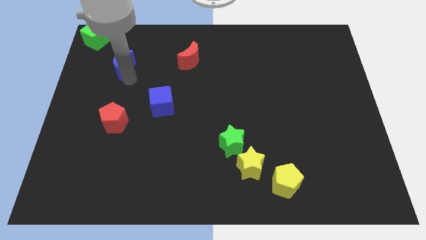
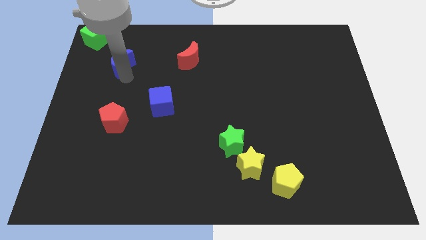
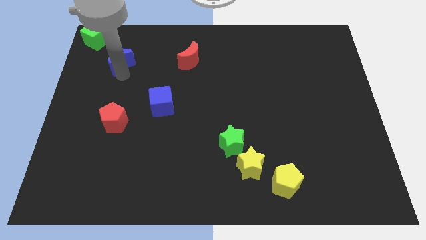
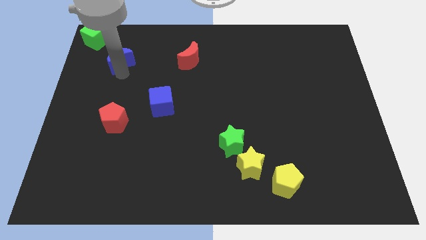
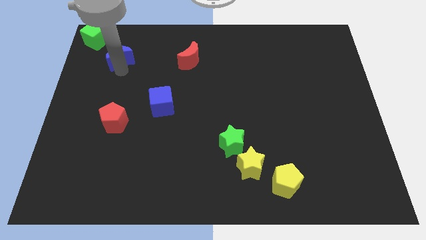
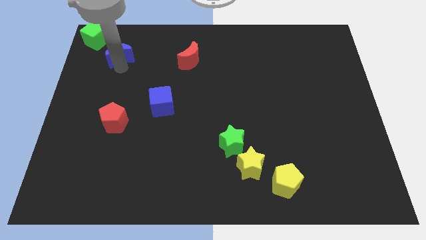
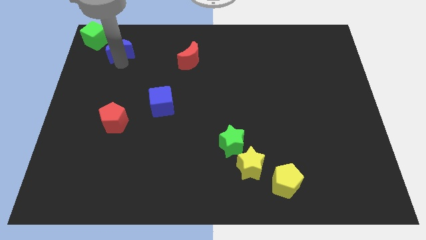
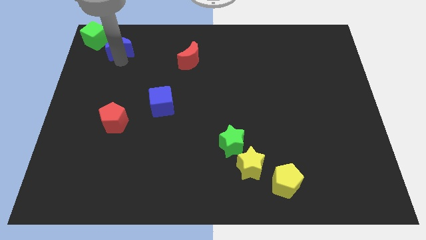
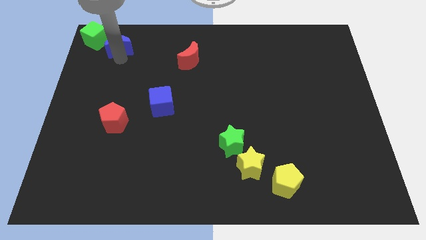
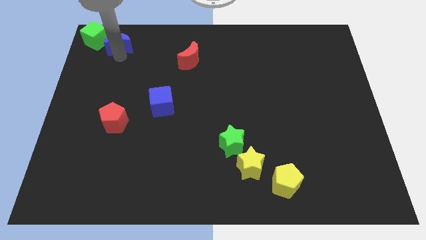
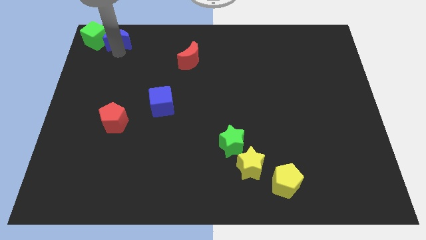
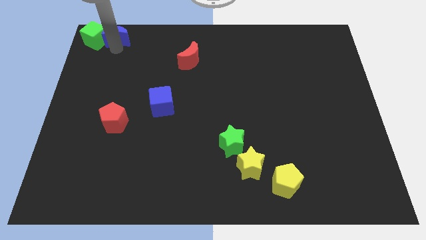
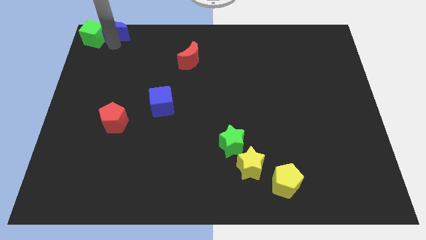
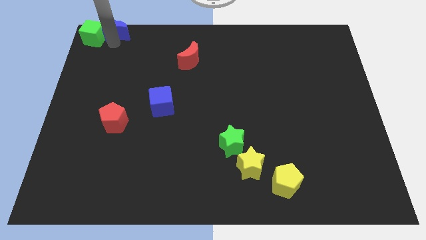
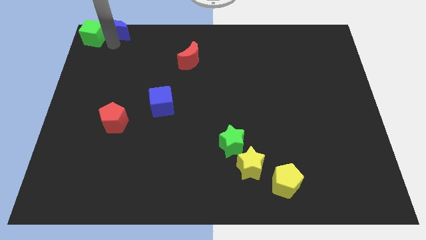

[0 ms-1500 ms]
put the blue crescent on the right side of the green cube

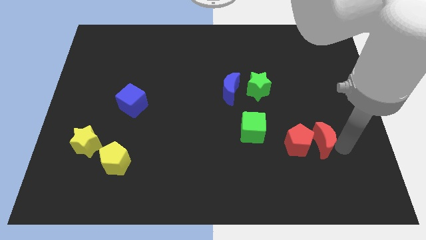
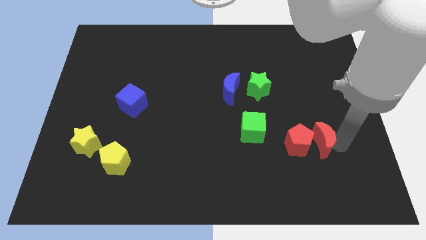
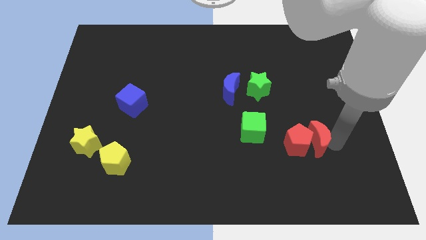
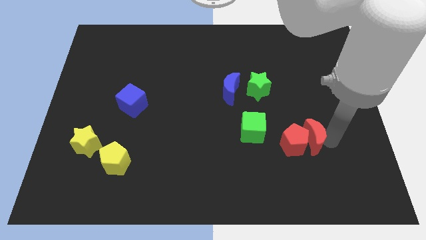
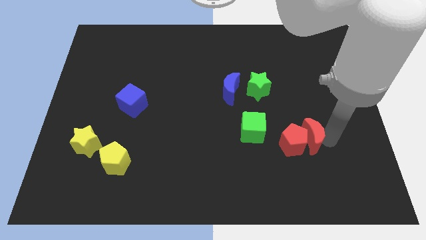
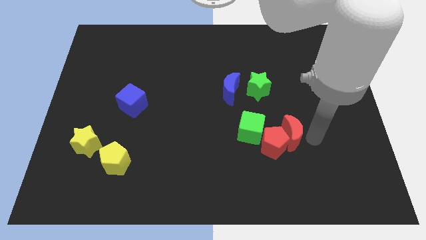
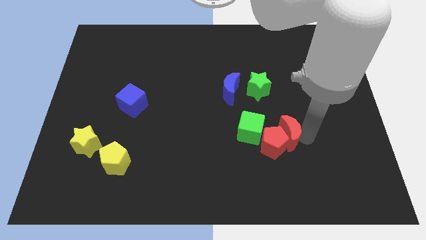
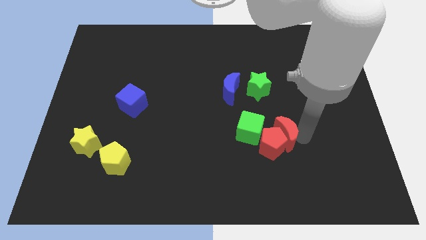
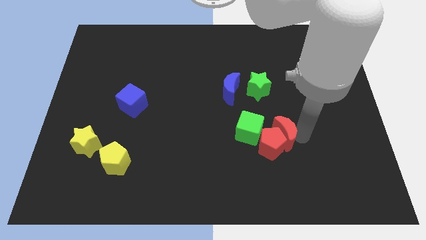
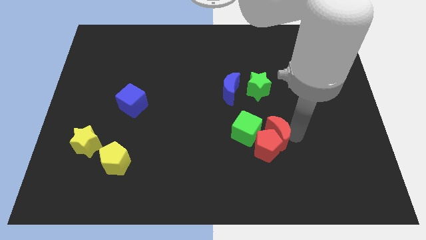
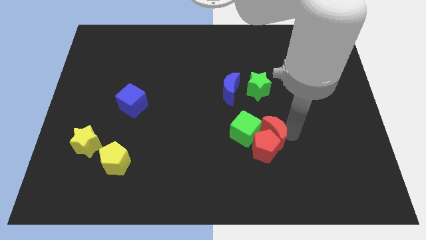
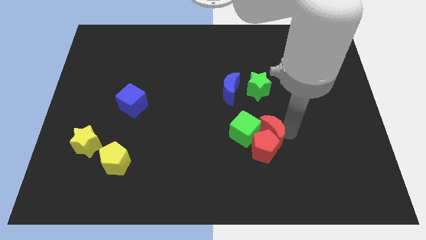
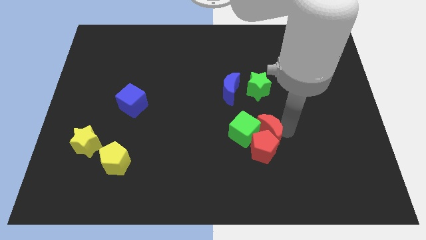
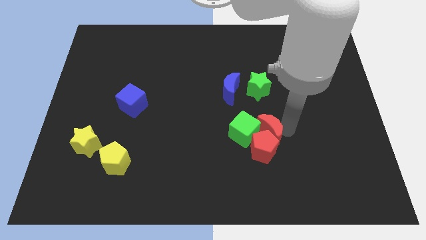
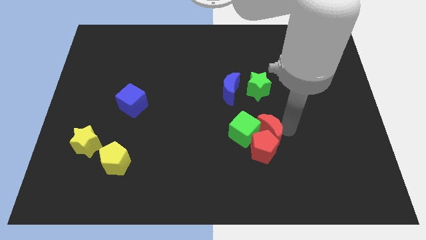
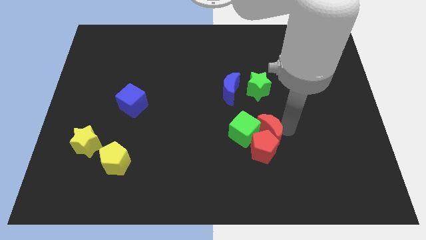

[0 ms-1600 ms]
move red moon into the green cube and red pentagon

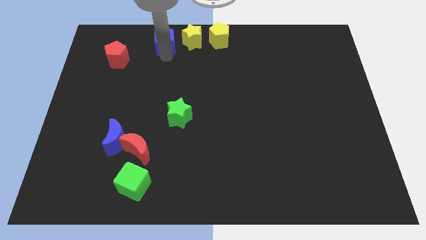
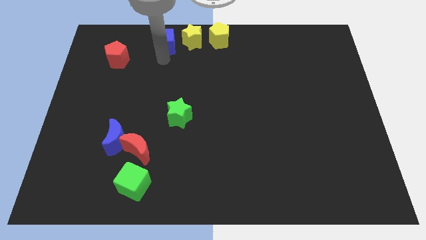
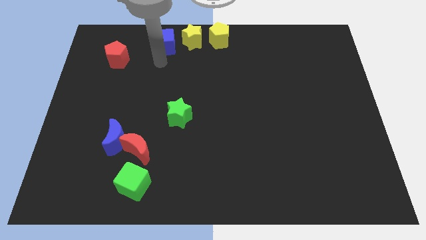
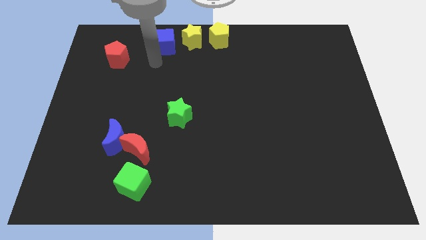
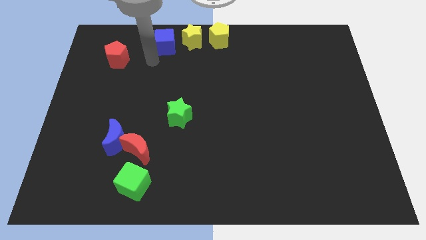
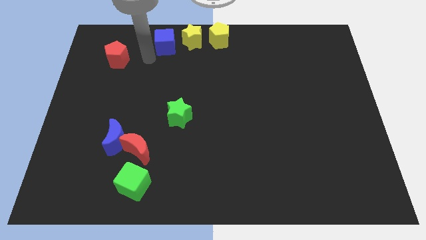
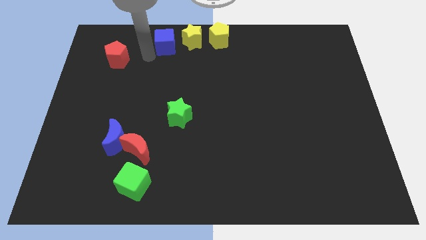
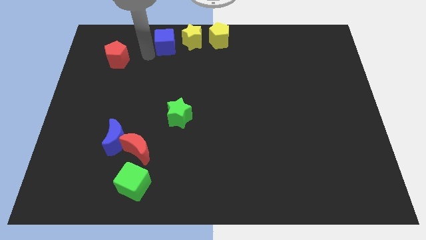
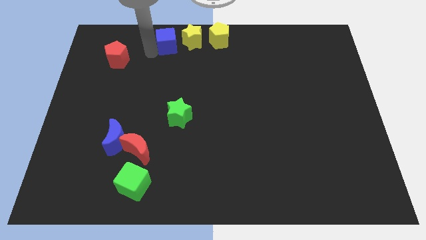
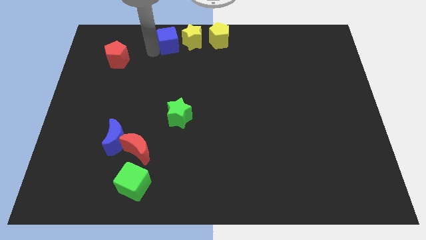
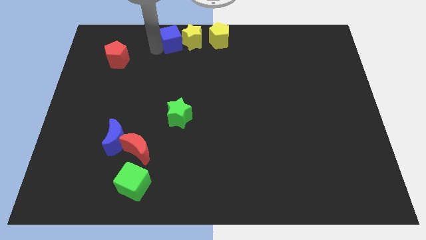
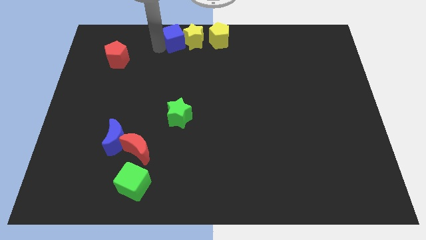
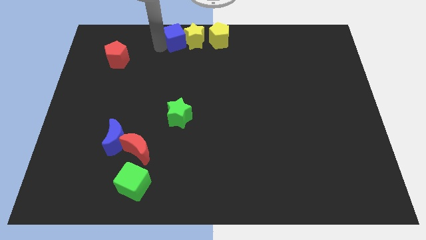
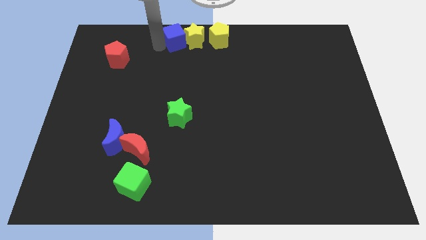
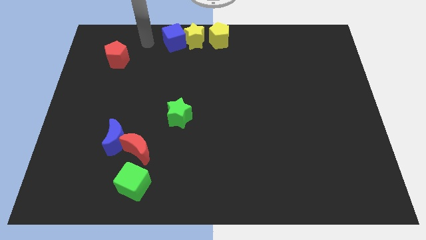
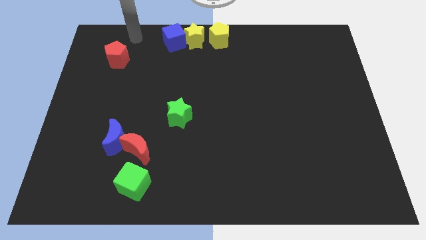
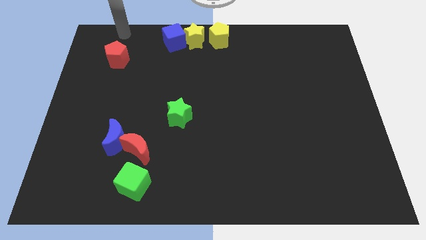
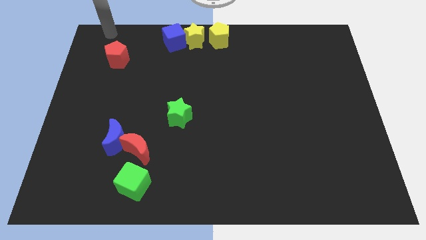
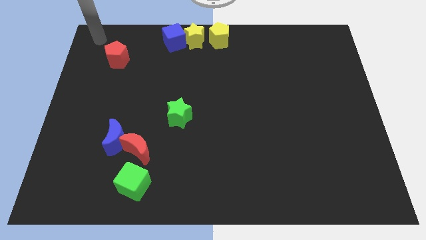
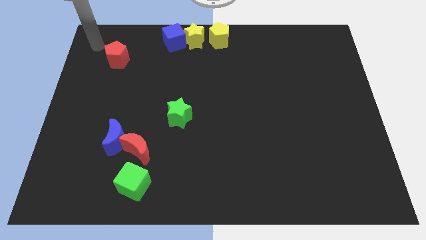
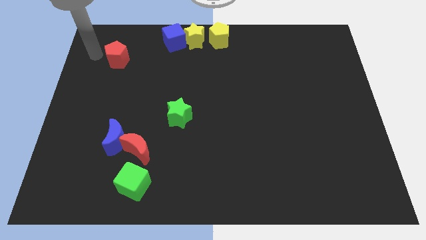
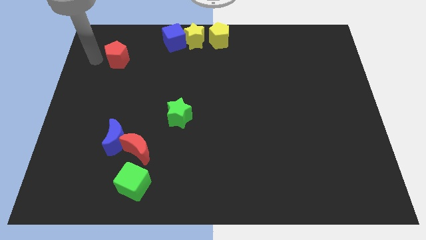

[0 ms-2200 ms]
move the blue cube into the yellow star

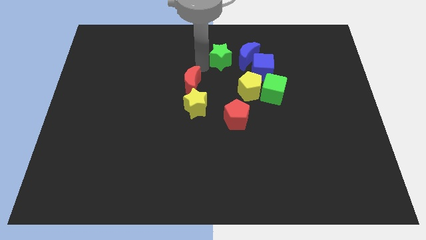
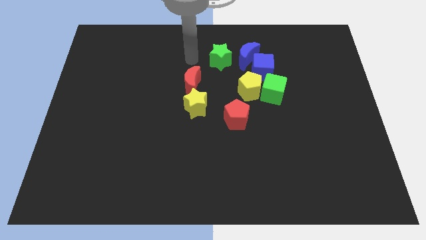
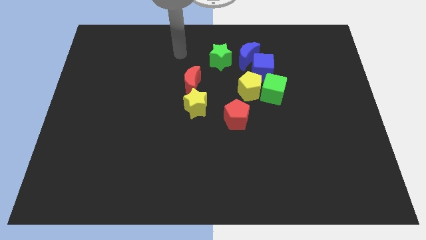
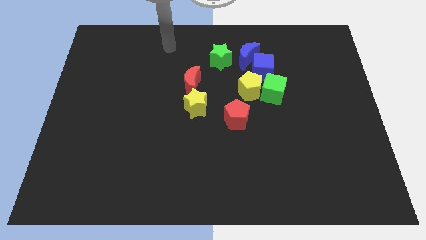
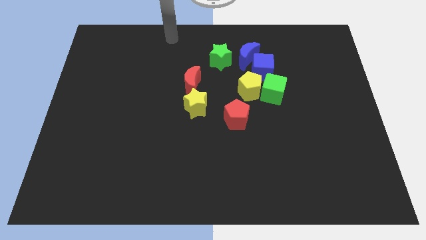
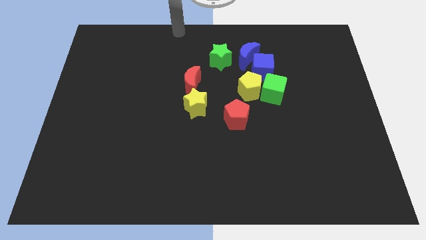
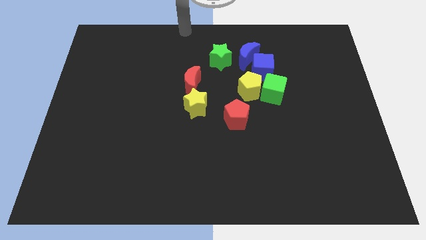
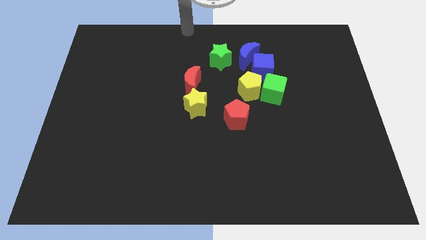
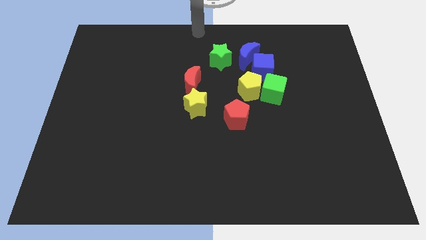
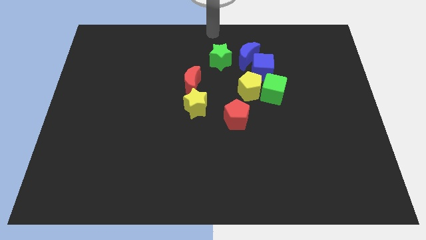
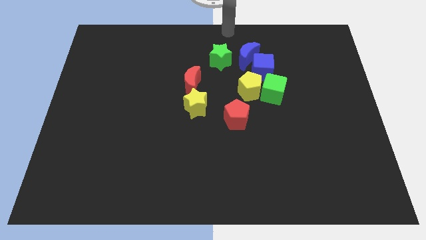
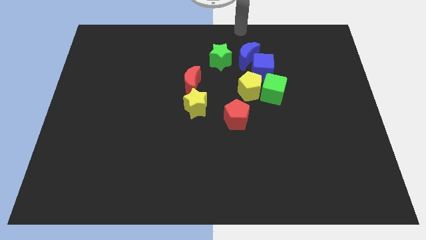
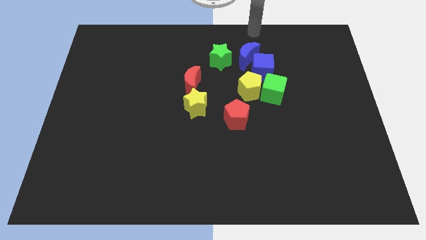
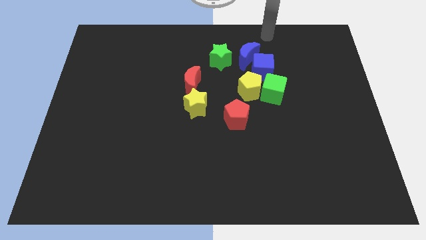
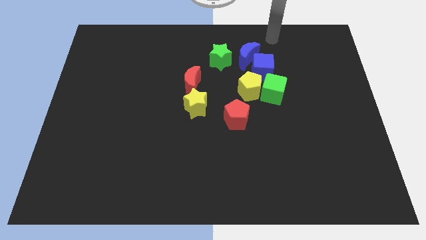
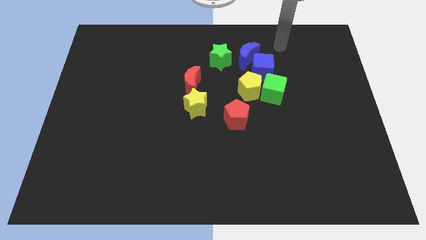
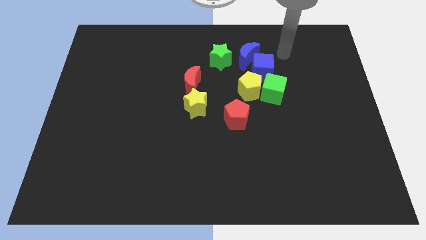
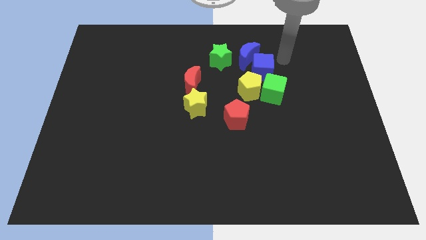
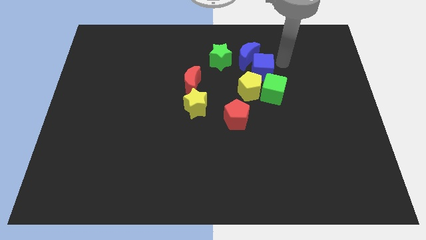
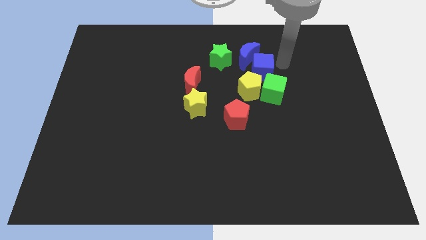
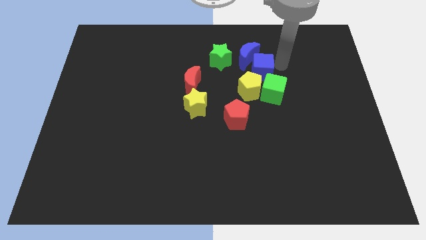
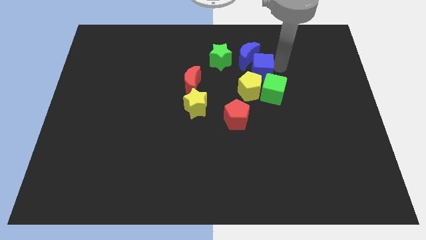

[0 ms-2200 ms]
move your arm away from the green star

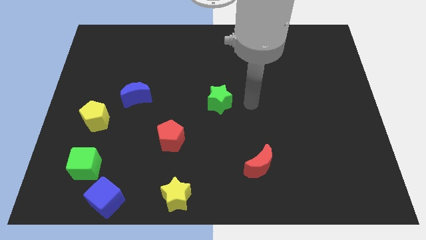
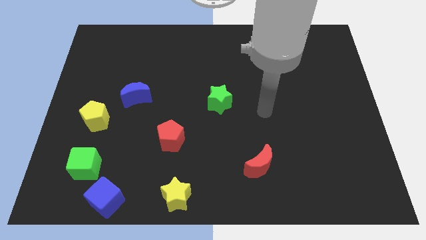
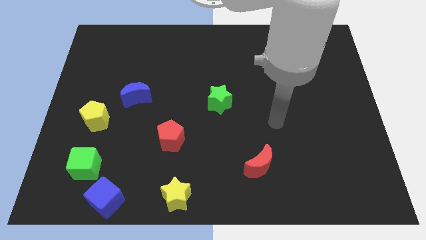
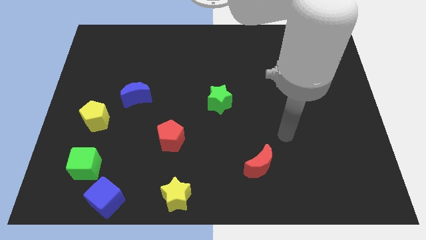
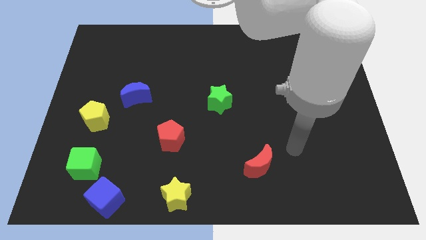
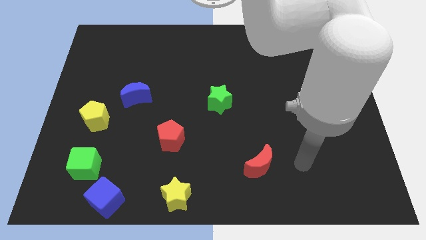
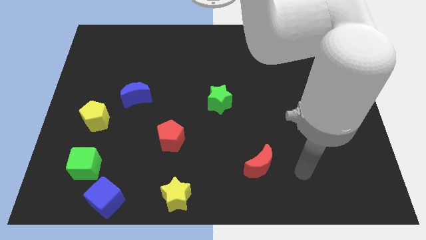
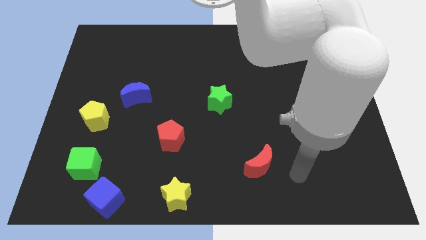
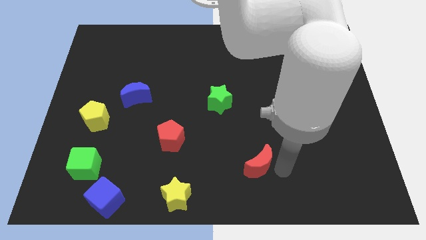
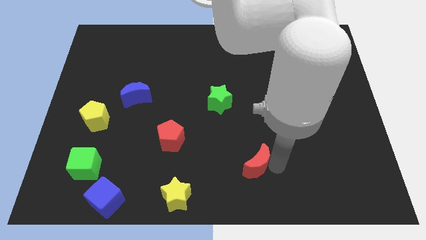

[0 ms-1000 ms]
move the arm from green star to red crescent

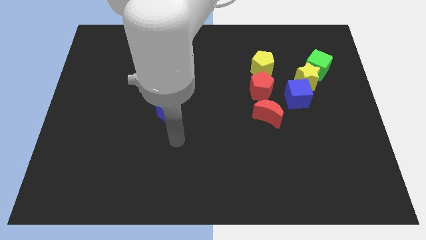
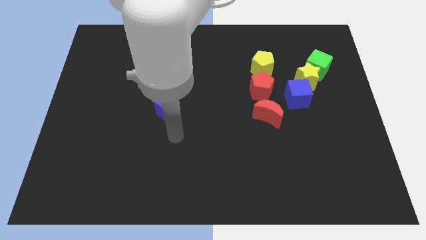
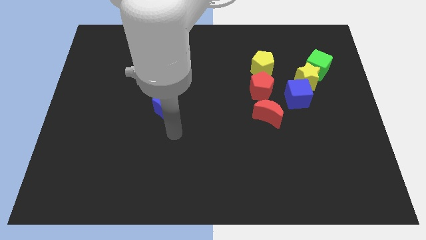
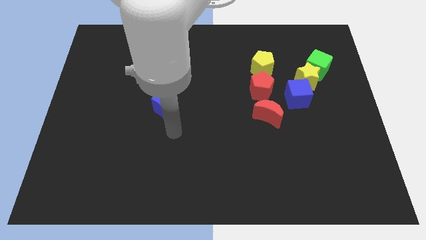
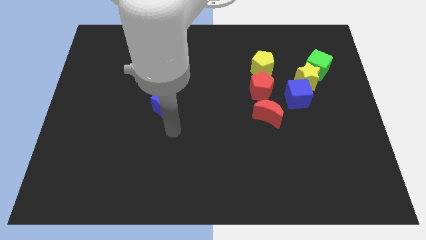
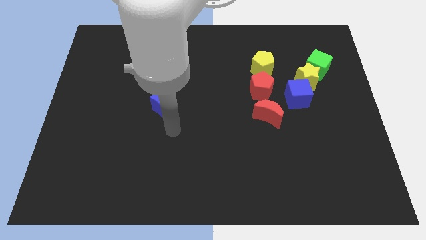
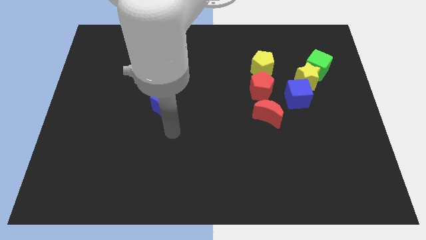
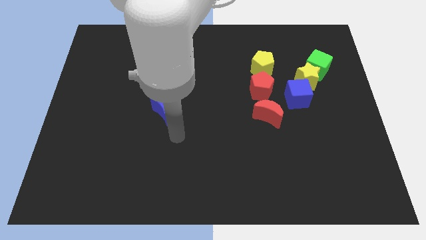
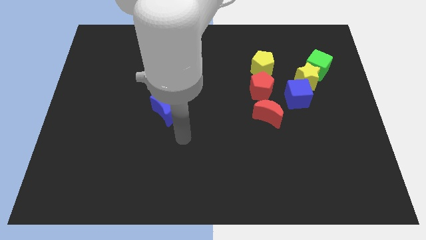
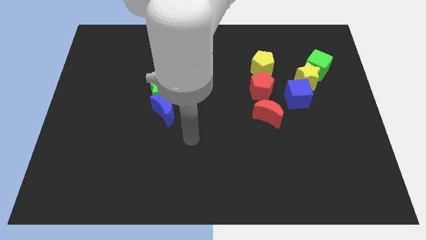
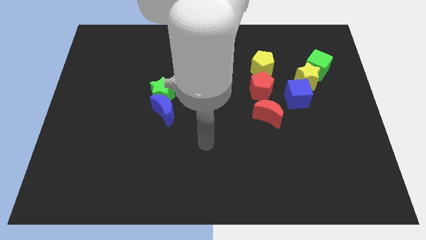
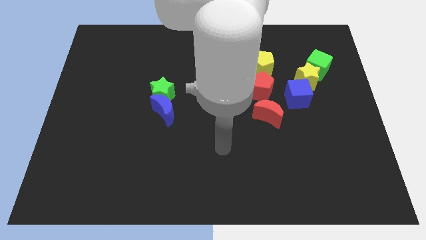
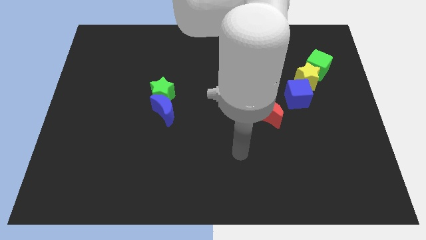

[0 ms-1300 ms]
place the blue moon below the green star
